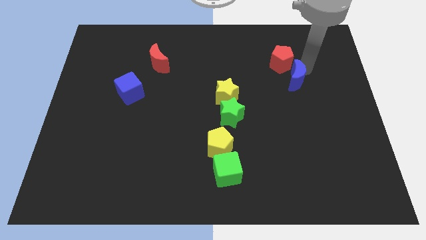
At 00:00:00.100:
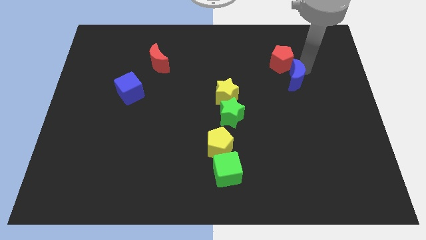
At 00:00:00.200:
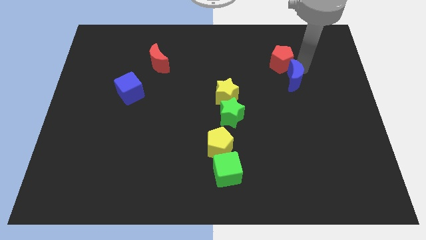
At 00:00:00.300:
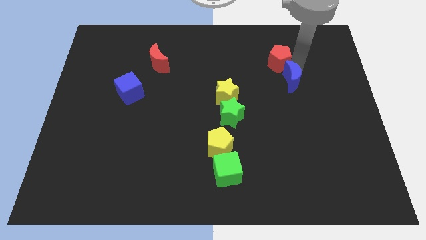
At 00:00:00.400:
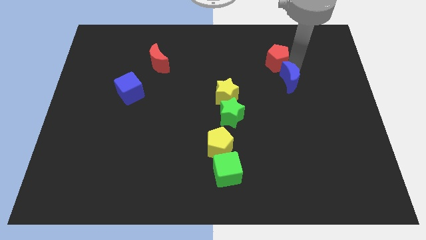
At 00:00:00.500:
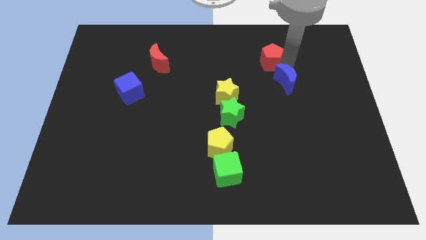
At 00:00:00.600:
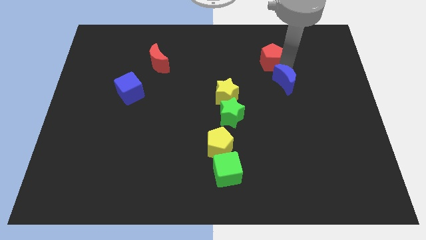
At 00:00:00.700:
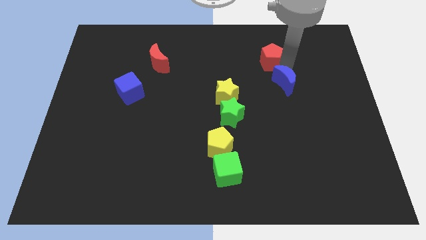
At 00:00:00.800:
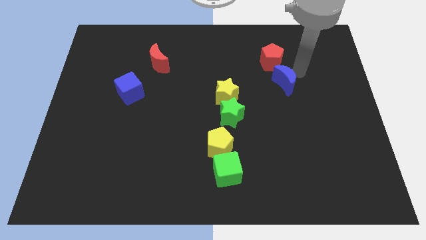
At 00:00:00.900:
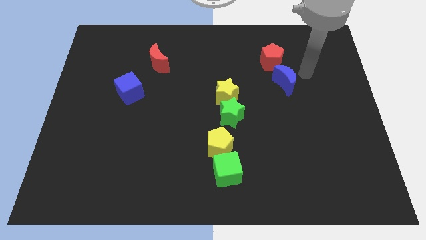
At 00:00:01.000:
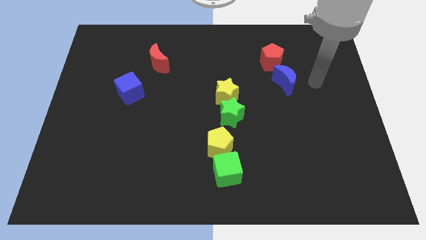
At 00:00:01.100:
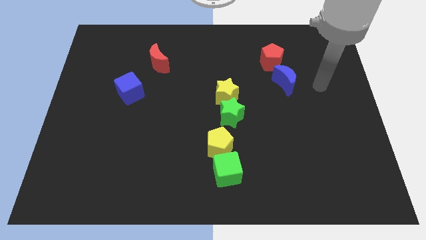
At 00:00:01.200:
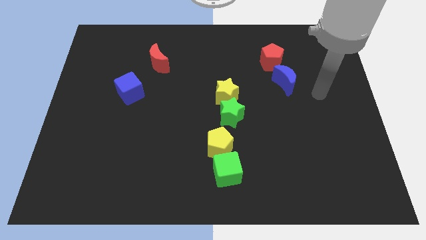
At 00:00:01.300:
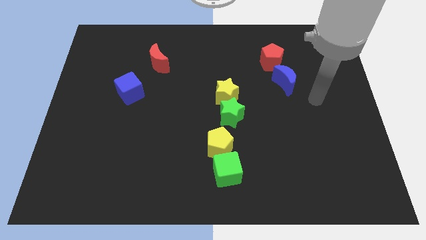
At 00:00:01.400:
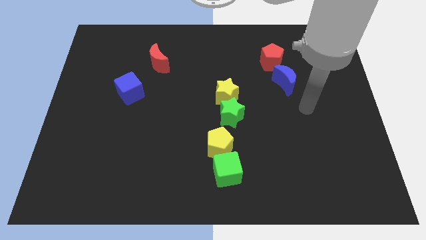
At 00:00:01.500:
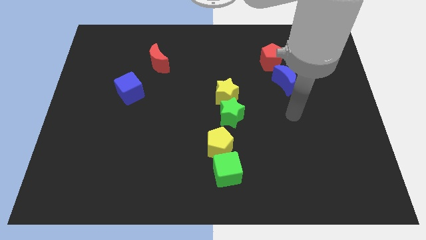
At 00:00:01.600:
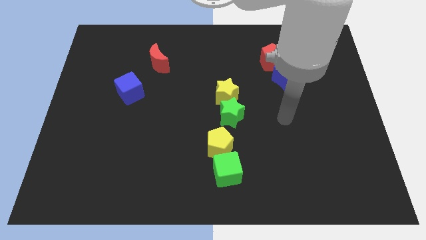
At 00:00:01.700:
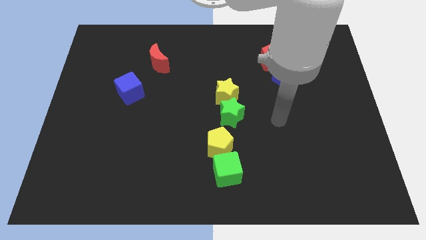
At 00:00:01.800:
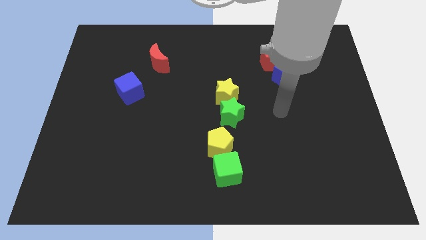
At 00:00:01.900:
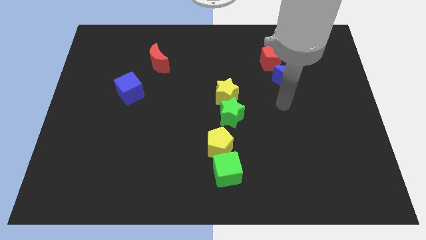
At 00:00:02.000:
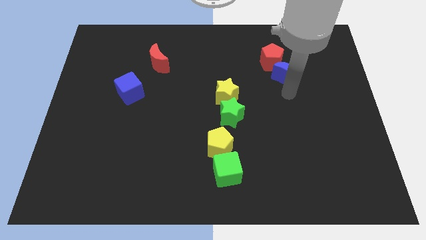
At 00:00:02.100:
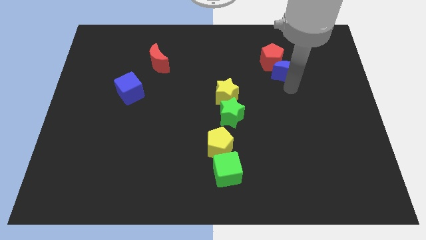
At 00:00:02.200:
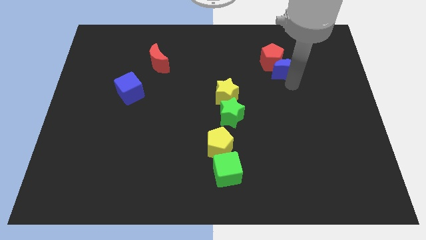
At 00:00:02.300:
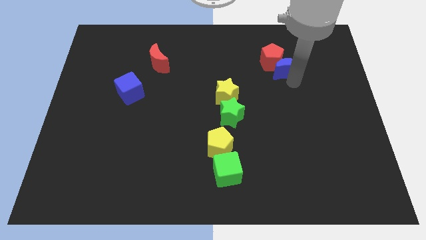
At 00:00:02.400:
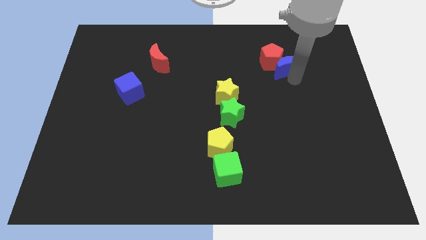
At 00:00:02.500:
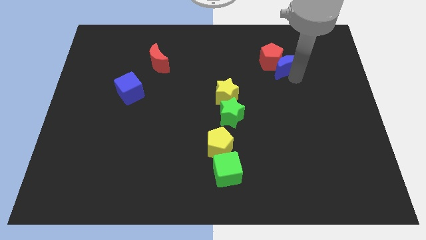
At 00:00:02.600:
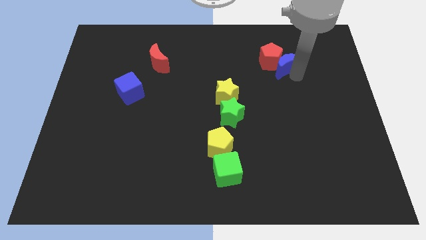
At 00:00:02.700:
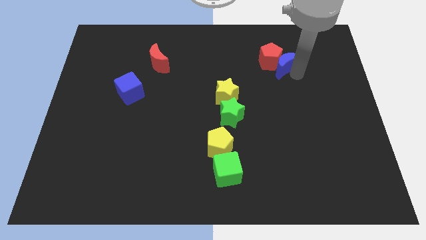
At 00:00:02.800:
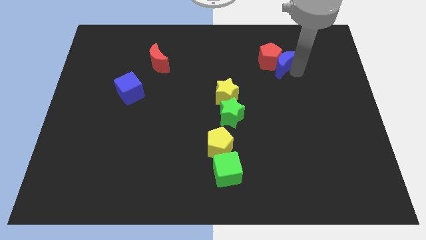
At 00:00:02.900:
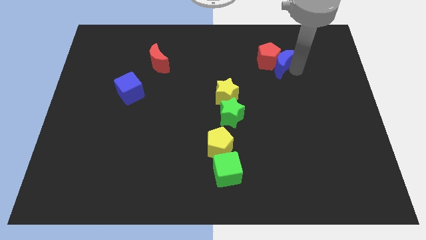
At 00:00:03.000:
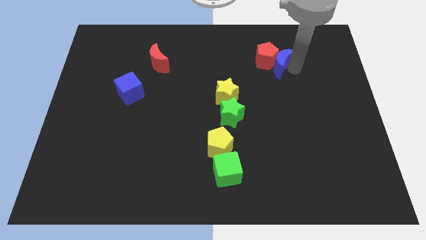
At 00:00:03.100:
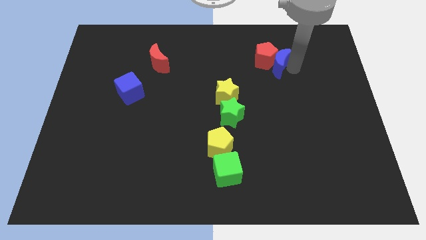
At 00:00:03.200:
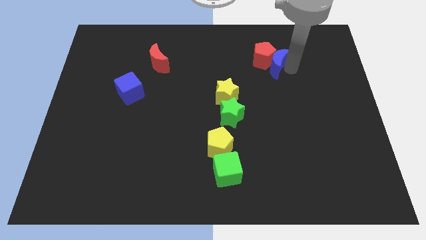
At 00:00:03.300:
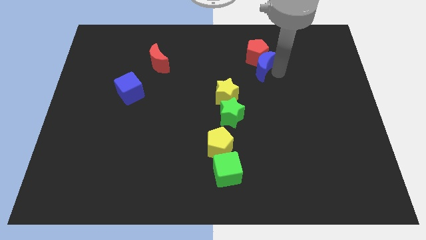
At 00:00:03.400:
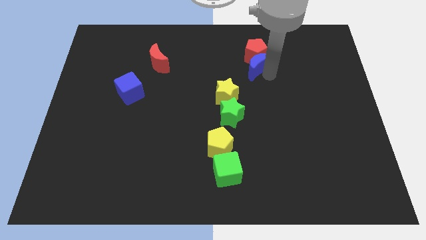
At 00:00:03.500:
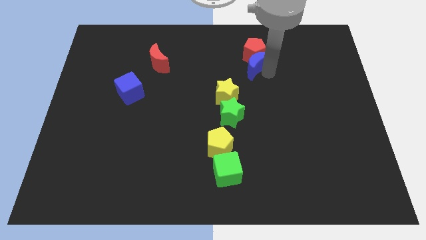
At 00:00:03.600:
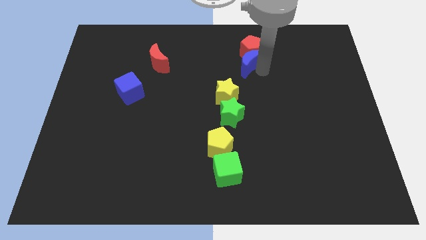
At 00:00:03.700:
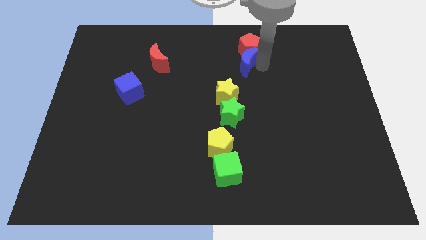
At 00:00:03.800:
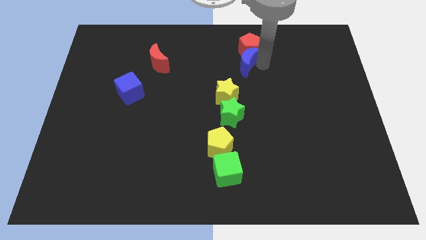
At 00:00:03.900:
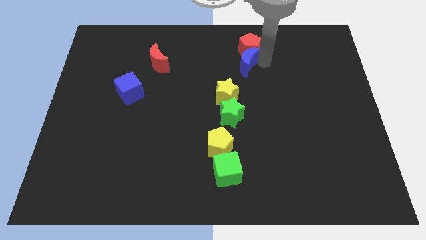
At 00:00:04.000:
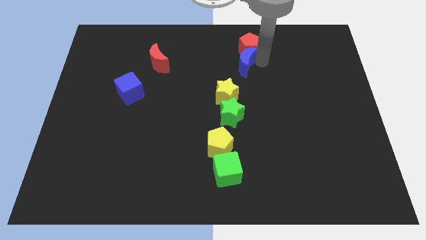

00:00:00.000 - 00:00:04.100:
slide the blue crescent and the red pentagon towards top

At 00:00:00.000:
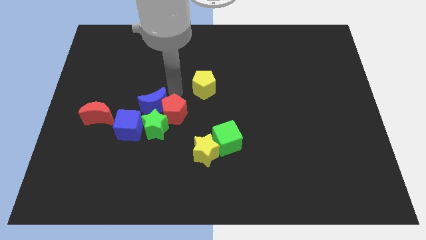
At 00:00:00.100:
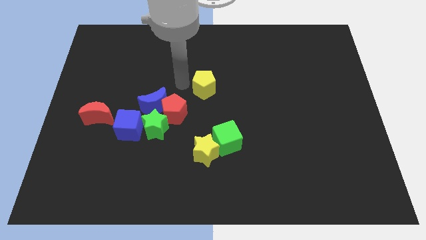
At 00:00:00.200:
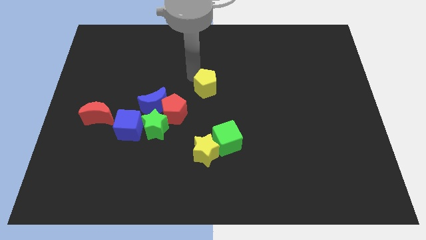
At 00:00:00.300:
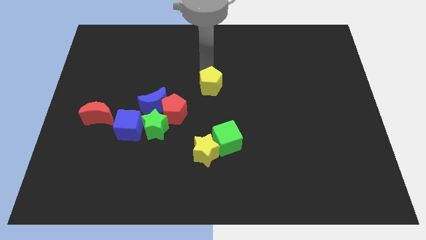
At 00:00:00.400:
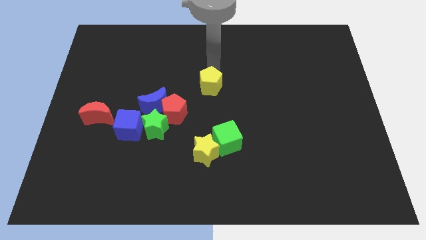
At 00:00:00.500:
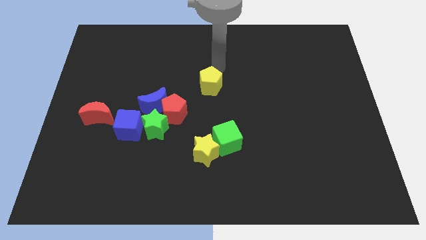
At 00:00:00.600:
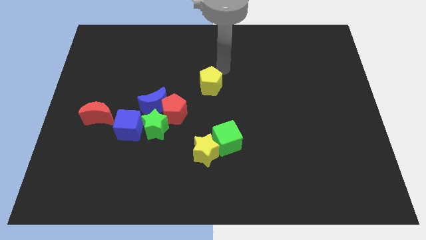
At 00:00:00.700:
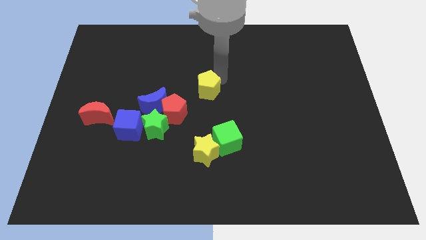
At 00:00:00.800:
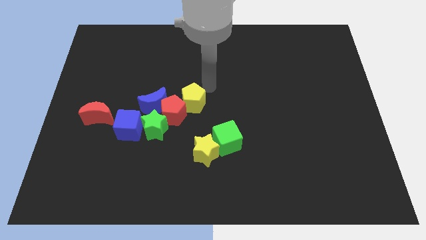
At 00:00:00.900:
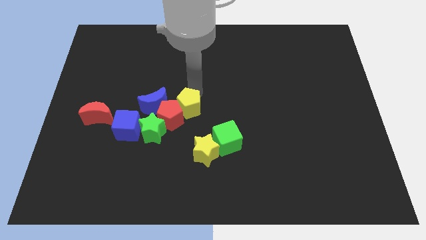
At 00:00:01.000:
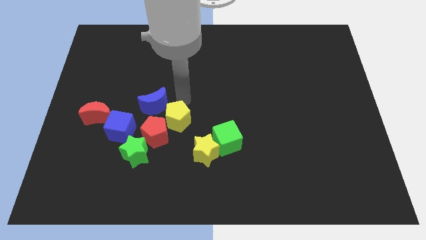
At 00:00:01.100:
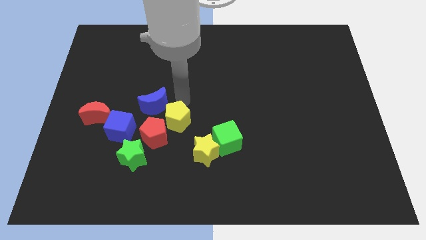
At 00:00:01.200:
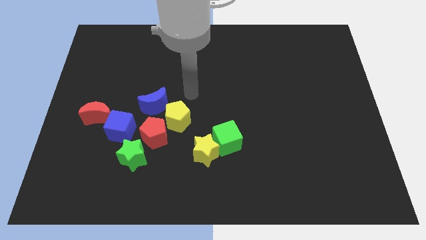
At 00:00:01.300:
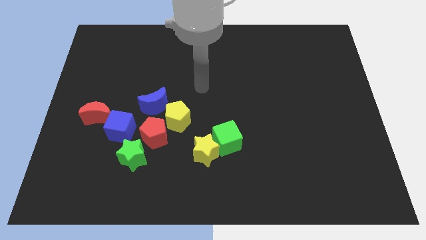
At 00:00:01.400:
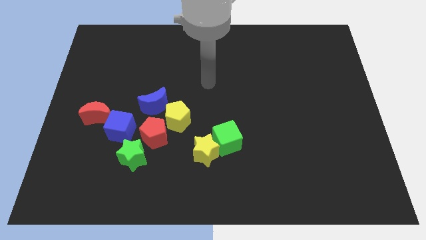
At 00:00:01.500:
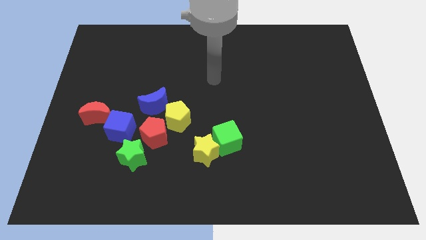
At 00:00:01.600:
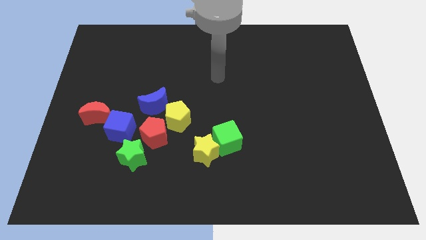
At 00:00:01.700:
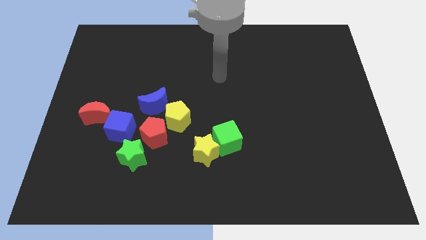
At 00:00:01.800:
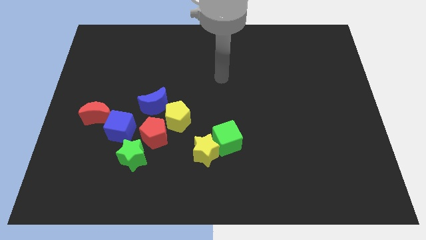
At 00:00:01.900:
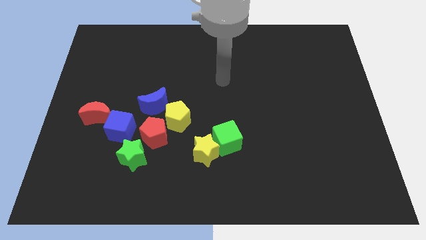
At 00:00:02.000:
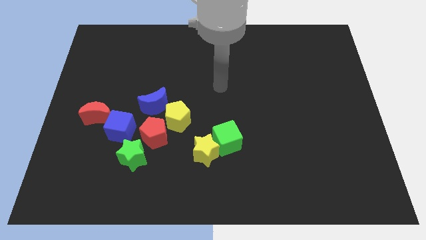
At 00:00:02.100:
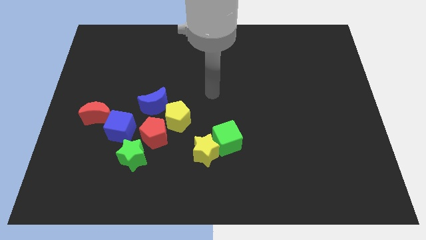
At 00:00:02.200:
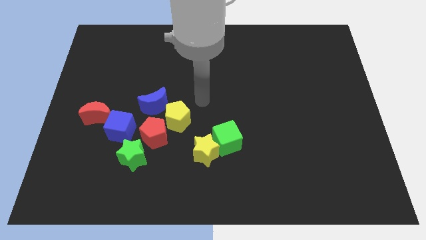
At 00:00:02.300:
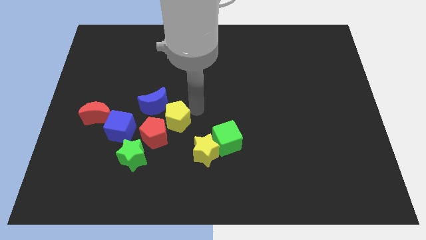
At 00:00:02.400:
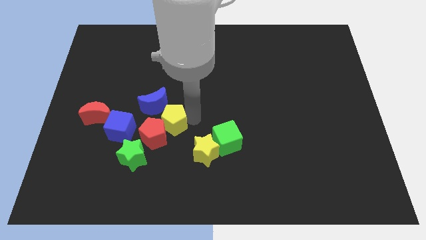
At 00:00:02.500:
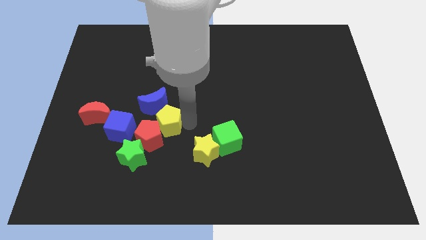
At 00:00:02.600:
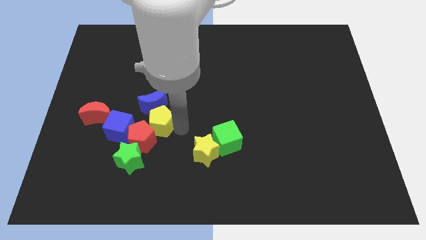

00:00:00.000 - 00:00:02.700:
push the yellow pentagon into the red pentagon

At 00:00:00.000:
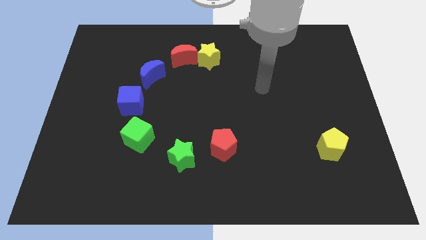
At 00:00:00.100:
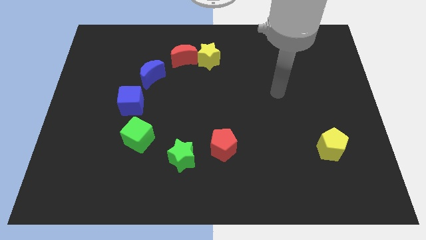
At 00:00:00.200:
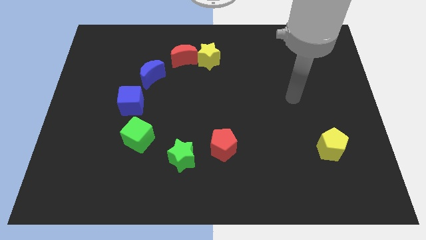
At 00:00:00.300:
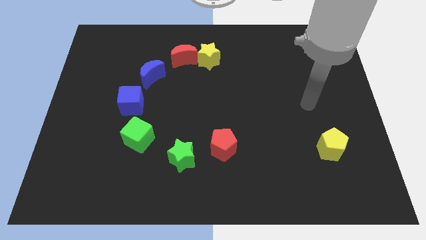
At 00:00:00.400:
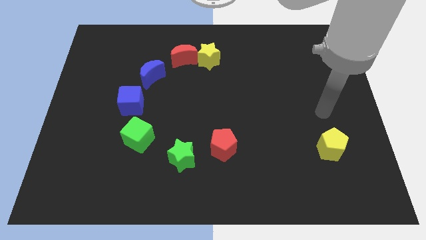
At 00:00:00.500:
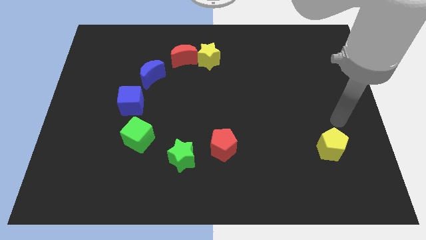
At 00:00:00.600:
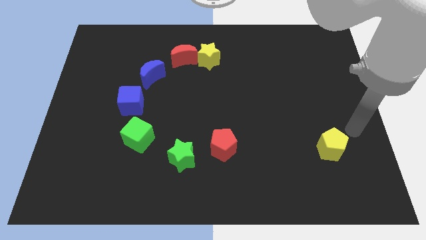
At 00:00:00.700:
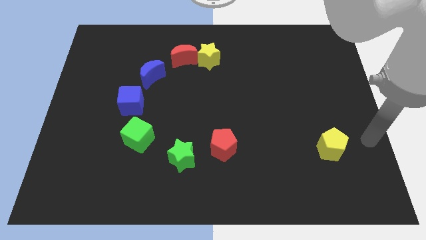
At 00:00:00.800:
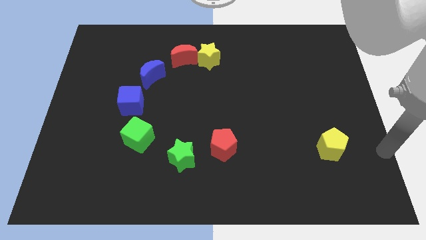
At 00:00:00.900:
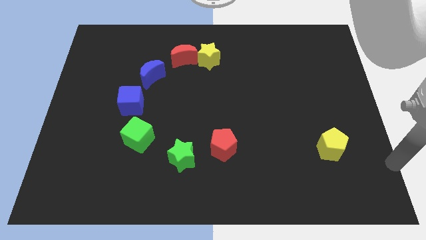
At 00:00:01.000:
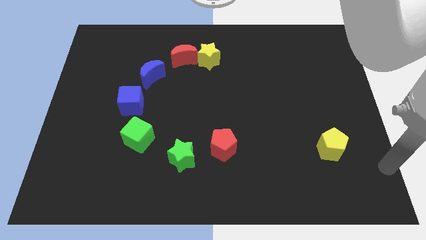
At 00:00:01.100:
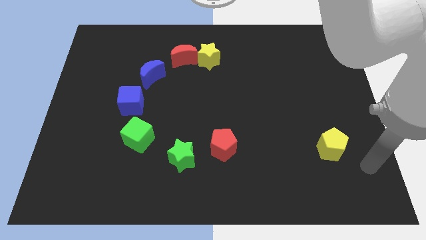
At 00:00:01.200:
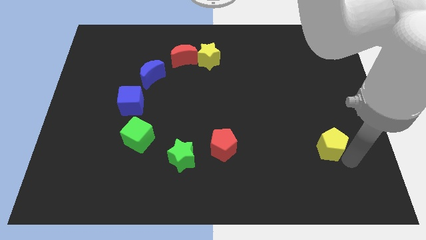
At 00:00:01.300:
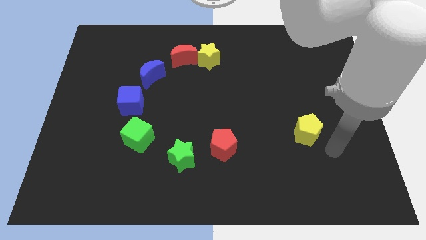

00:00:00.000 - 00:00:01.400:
move the arm towards the yellow pentagon

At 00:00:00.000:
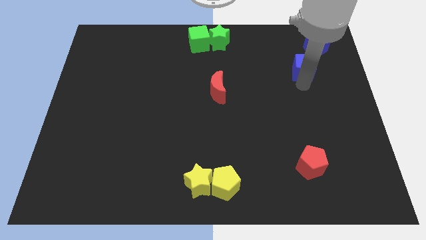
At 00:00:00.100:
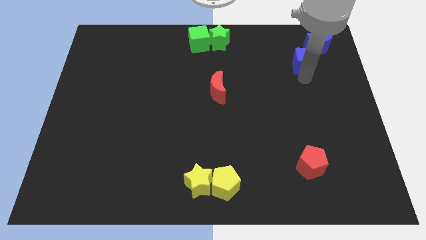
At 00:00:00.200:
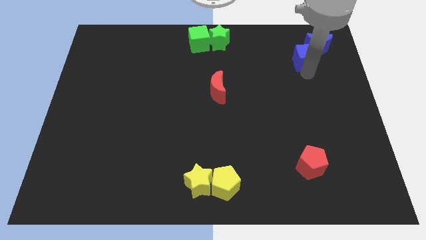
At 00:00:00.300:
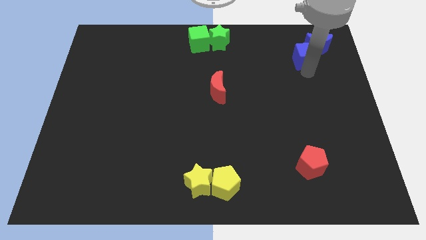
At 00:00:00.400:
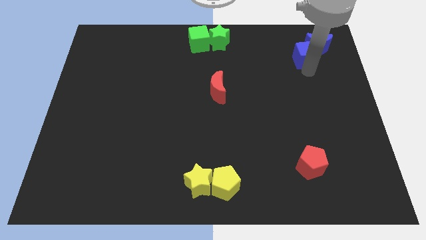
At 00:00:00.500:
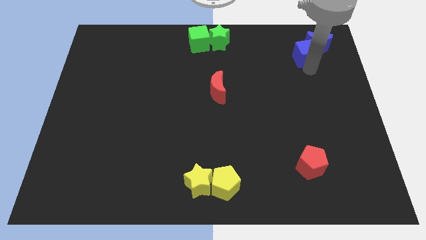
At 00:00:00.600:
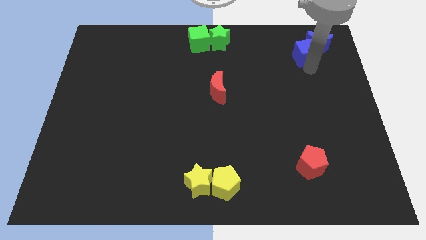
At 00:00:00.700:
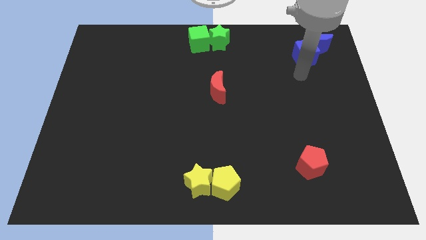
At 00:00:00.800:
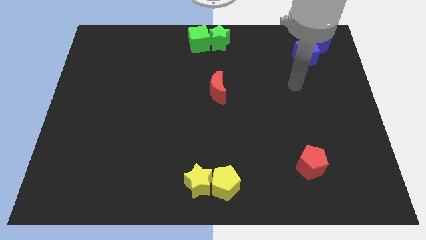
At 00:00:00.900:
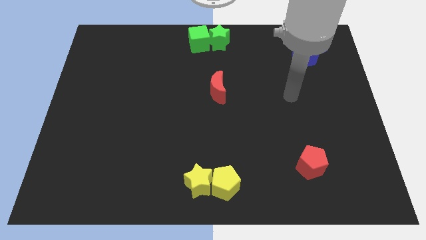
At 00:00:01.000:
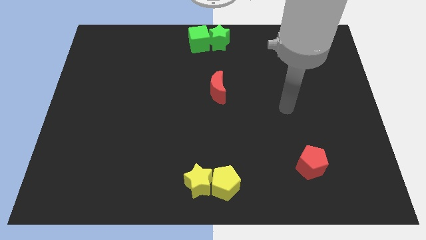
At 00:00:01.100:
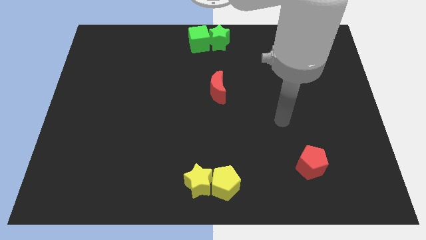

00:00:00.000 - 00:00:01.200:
push the blue cube close to the blue crescent
